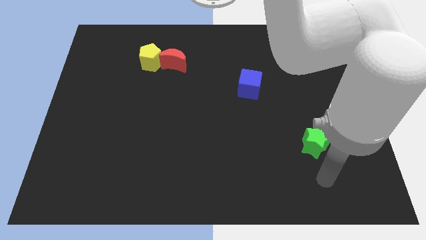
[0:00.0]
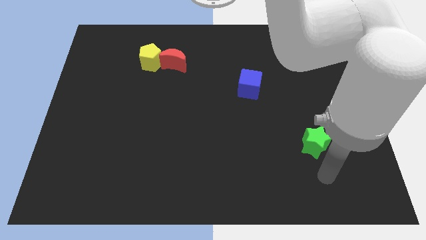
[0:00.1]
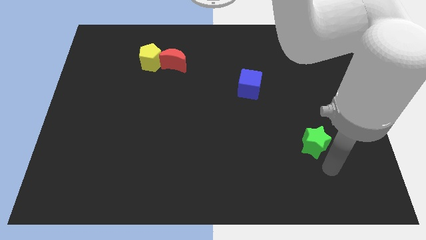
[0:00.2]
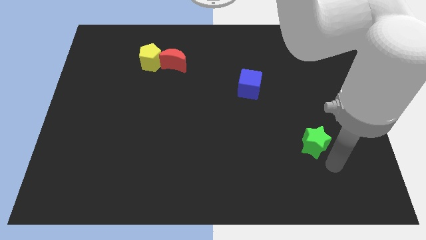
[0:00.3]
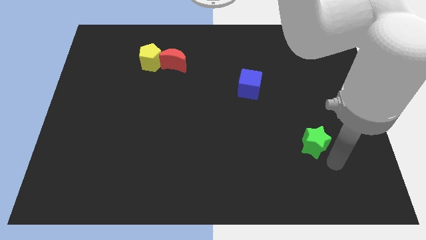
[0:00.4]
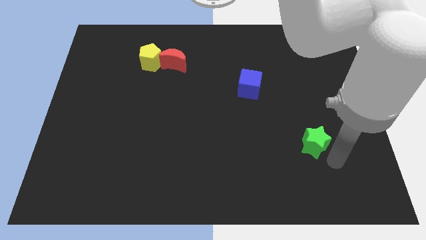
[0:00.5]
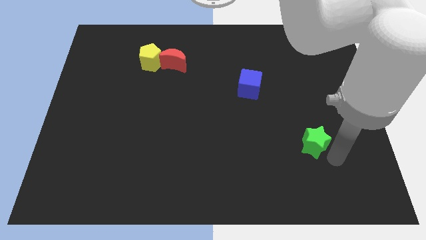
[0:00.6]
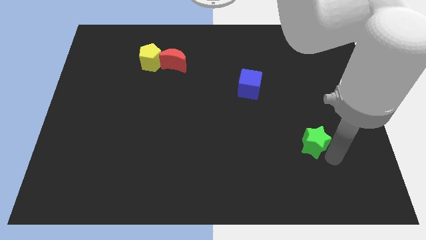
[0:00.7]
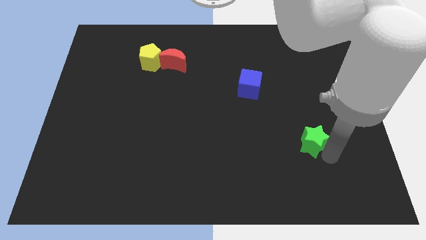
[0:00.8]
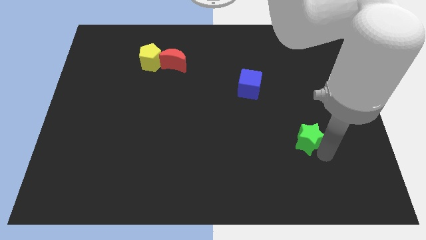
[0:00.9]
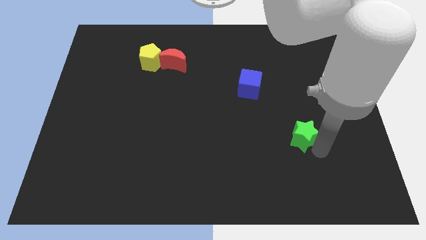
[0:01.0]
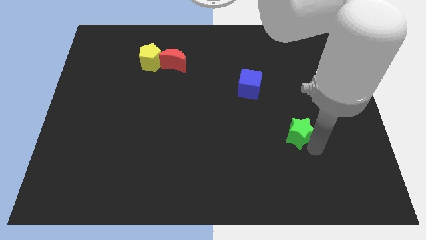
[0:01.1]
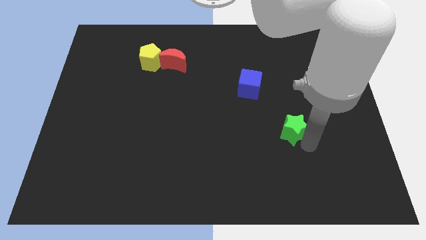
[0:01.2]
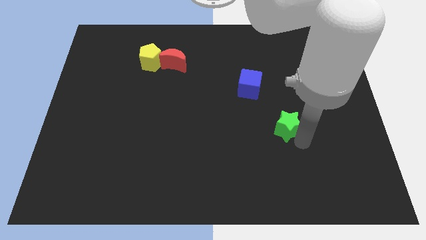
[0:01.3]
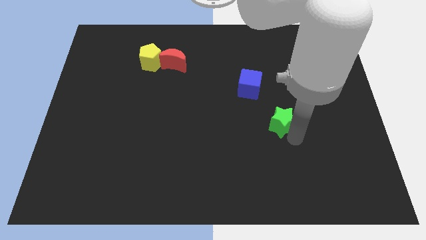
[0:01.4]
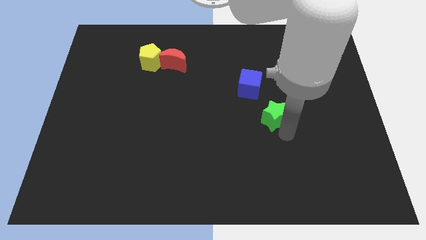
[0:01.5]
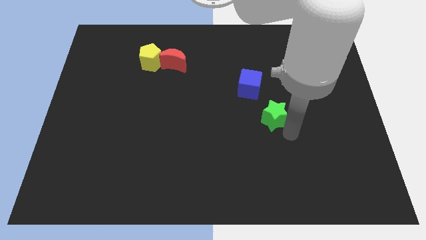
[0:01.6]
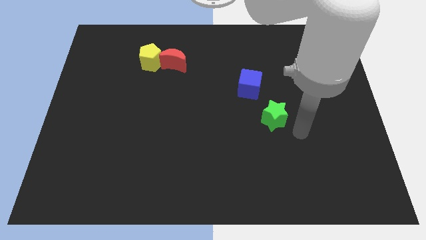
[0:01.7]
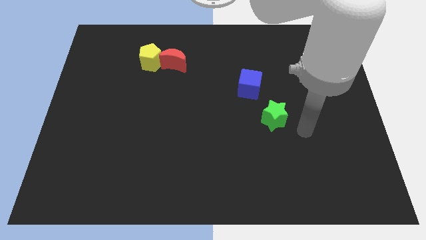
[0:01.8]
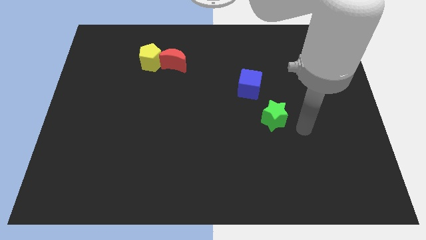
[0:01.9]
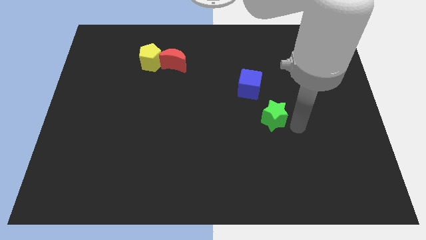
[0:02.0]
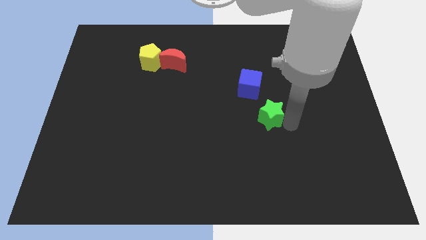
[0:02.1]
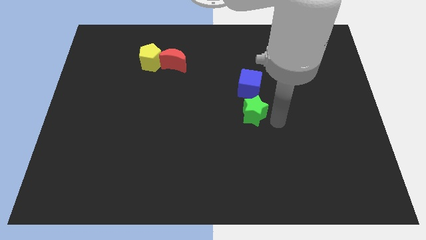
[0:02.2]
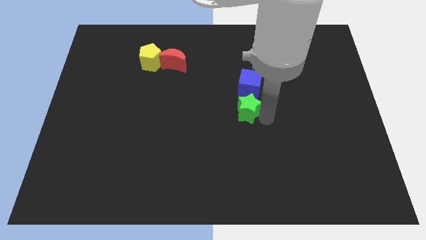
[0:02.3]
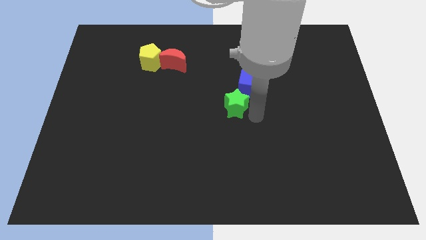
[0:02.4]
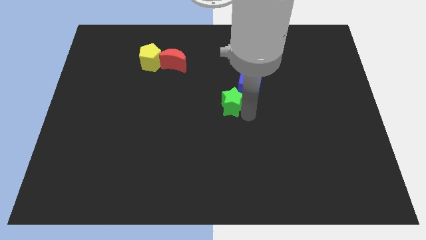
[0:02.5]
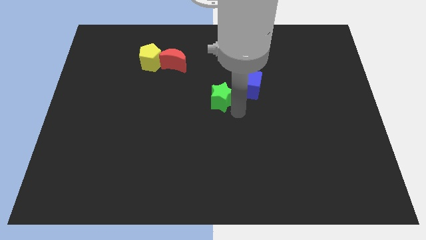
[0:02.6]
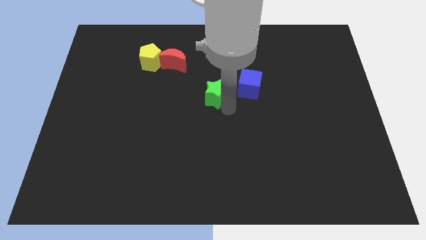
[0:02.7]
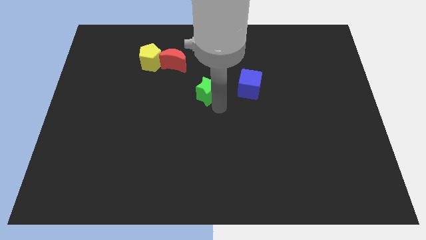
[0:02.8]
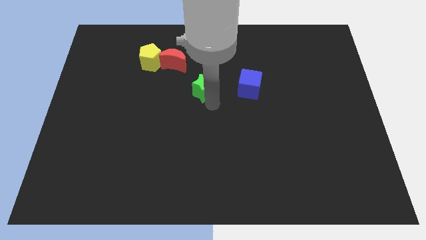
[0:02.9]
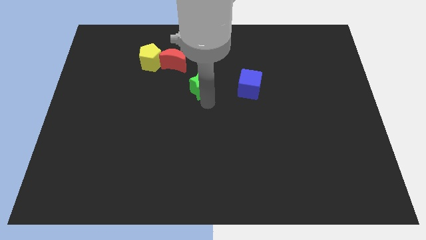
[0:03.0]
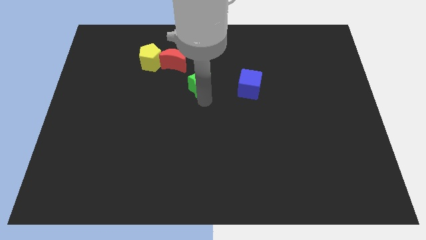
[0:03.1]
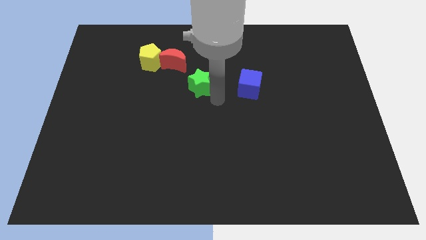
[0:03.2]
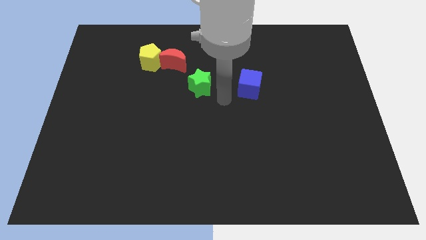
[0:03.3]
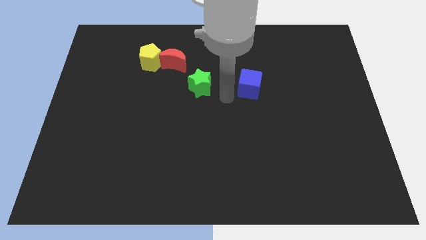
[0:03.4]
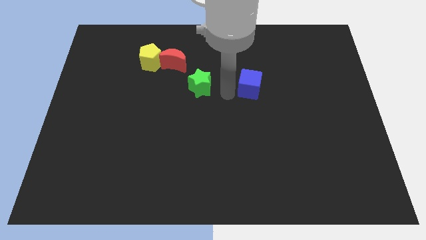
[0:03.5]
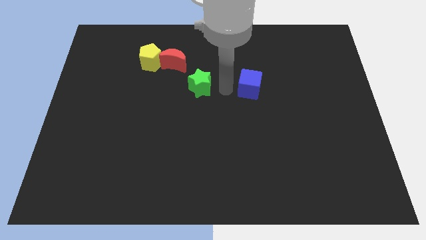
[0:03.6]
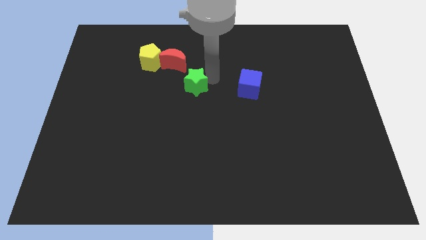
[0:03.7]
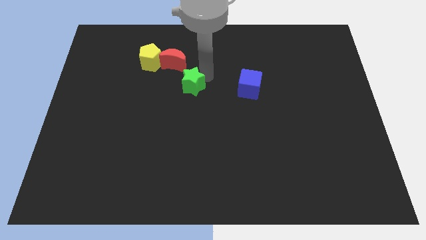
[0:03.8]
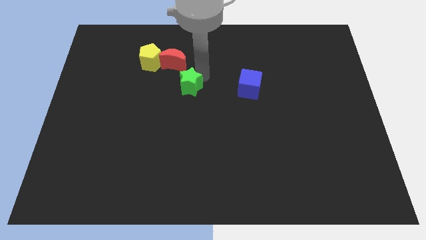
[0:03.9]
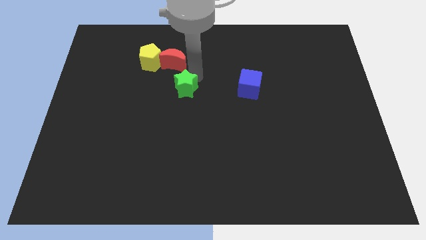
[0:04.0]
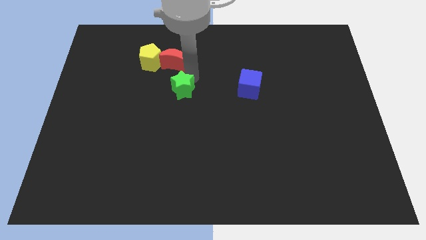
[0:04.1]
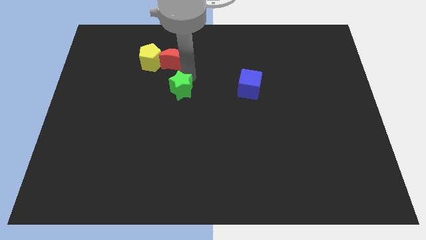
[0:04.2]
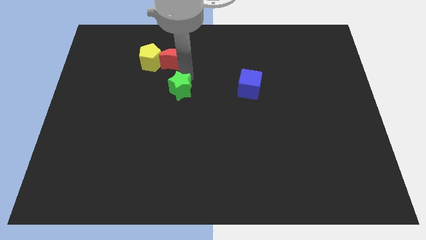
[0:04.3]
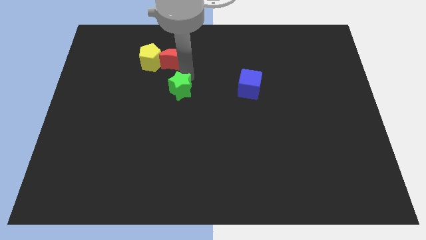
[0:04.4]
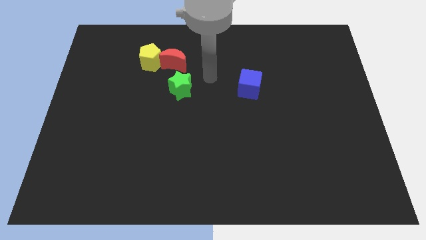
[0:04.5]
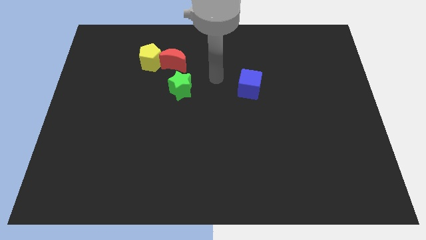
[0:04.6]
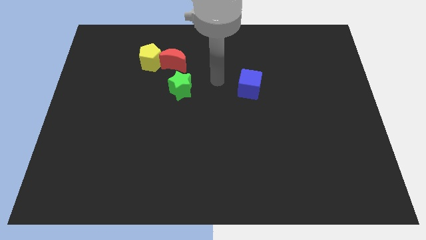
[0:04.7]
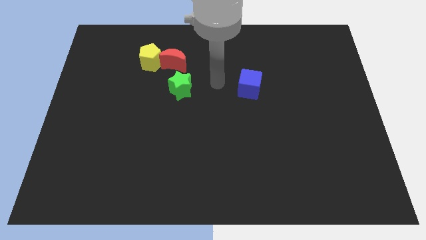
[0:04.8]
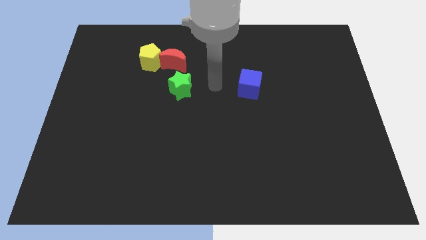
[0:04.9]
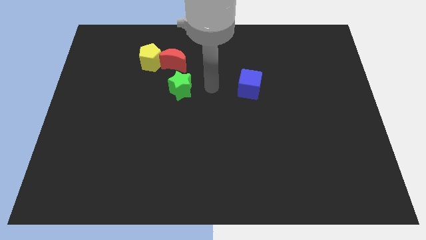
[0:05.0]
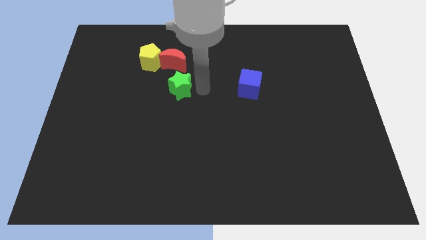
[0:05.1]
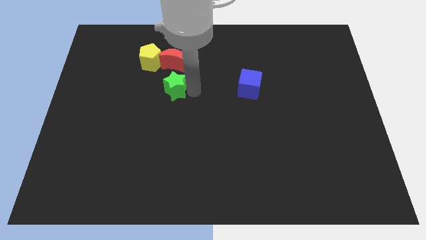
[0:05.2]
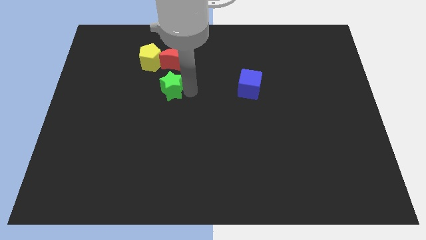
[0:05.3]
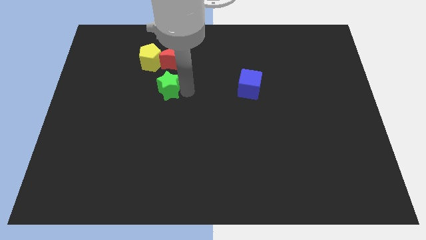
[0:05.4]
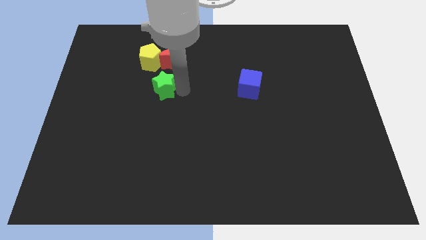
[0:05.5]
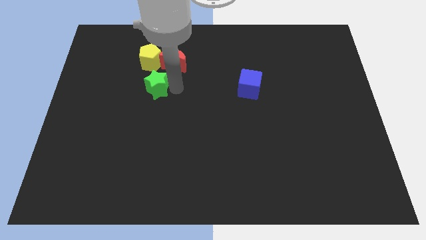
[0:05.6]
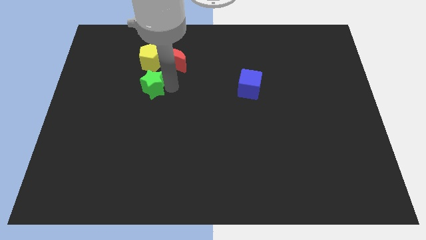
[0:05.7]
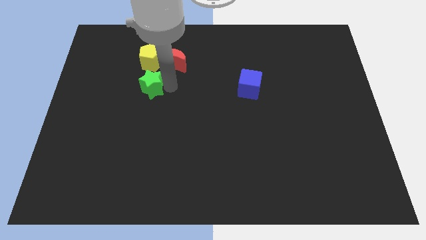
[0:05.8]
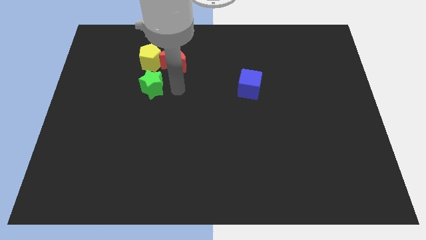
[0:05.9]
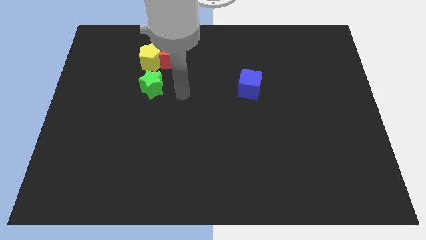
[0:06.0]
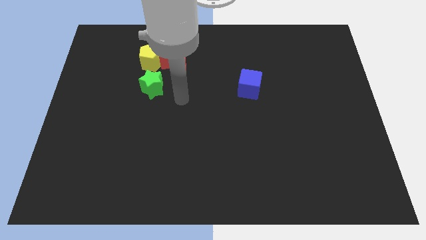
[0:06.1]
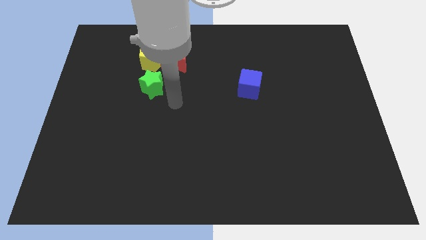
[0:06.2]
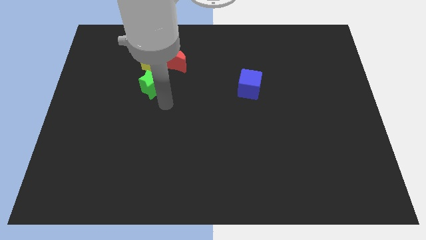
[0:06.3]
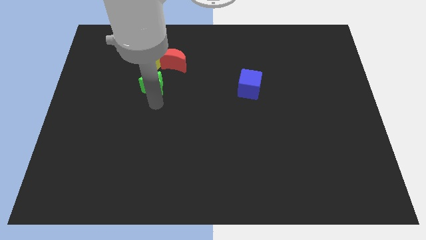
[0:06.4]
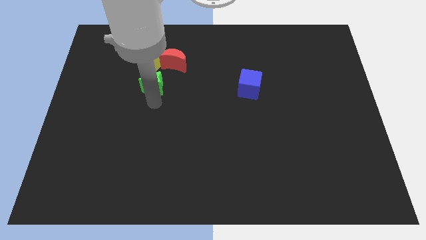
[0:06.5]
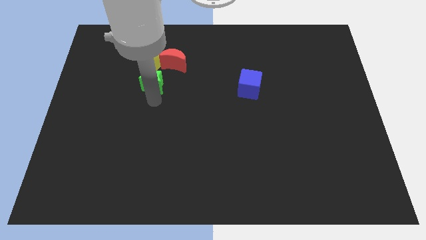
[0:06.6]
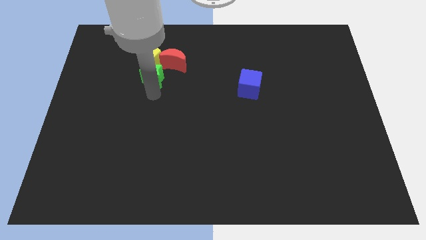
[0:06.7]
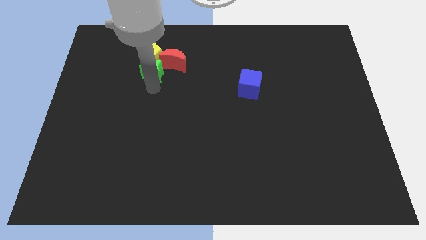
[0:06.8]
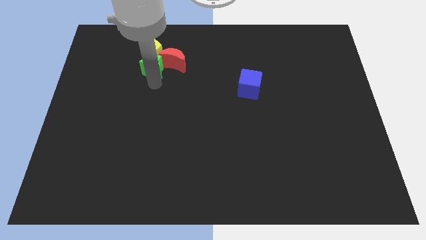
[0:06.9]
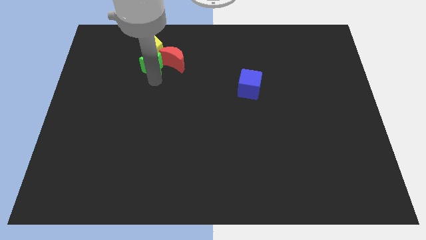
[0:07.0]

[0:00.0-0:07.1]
push the green block close to the pentagon

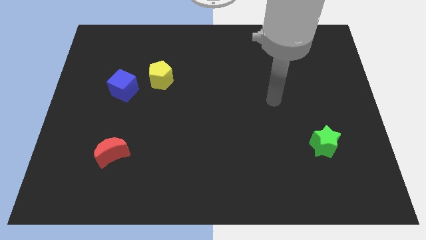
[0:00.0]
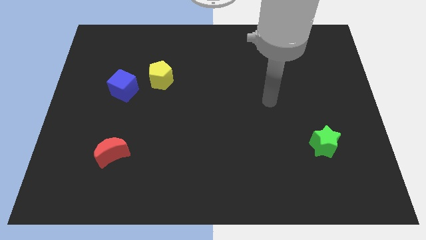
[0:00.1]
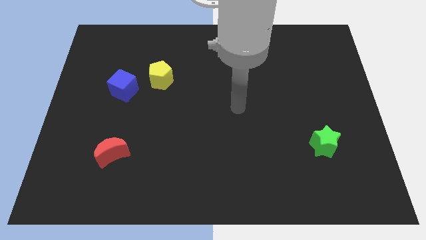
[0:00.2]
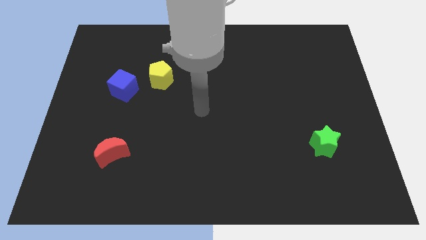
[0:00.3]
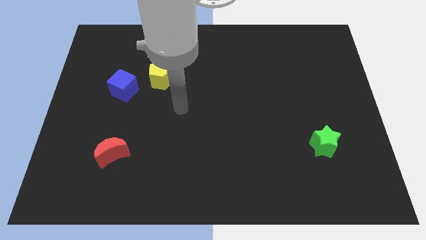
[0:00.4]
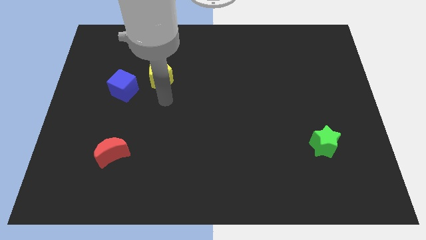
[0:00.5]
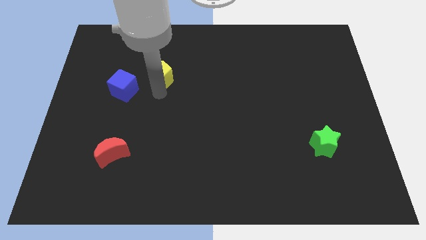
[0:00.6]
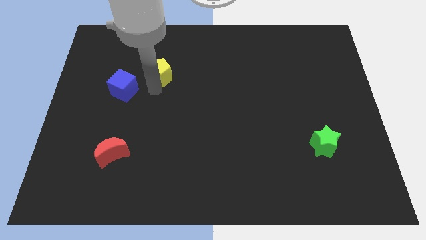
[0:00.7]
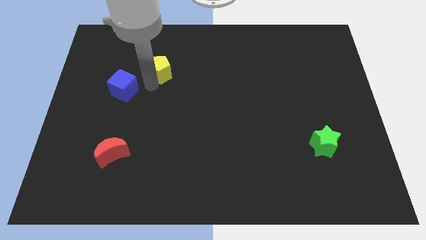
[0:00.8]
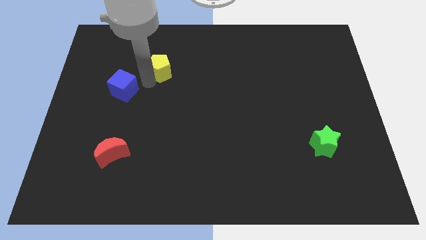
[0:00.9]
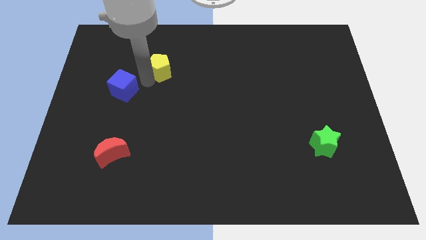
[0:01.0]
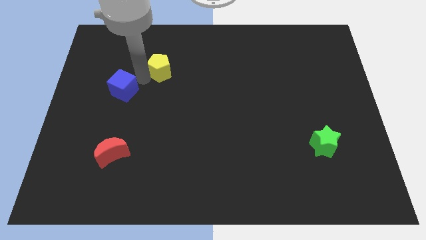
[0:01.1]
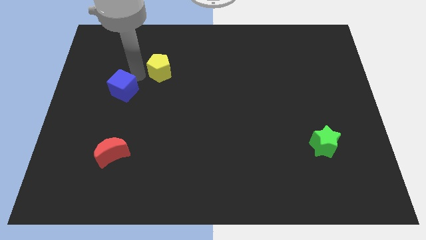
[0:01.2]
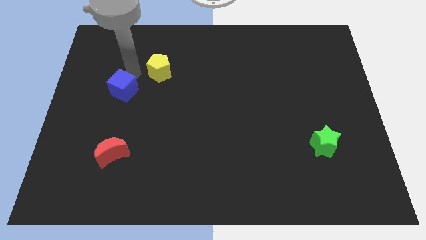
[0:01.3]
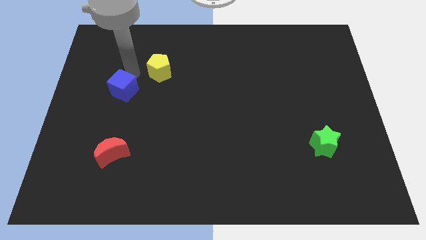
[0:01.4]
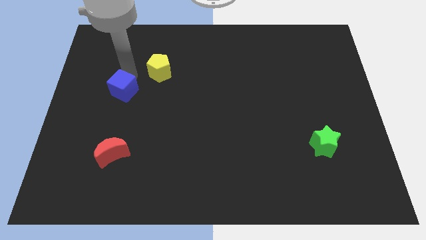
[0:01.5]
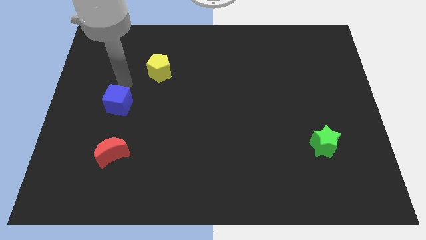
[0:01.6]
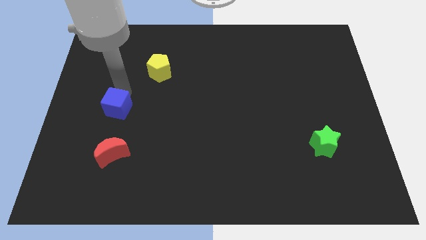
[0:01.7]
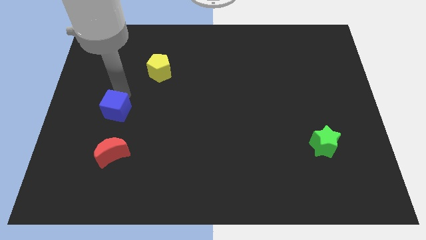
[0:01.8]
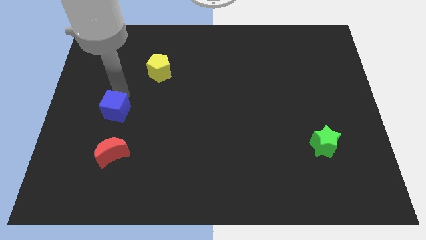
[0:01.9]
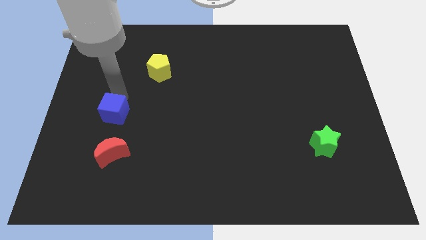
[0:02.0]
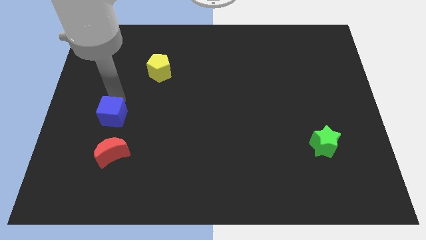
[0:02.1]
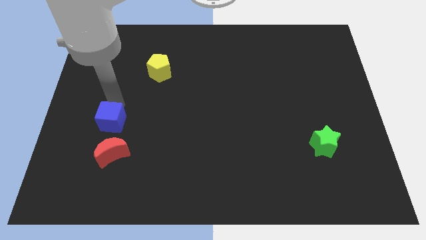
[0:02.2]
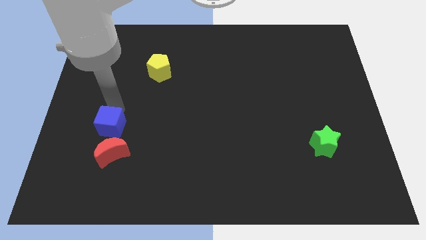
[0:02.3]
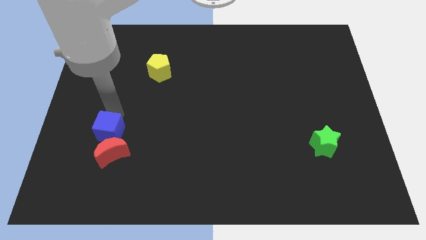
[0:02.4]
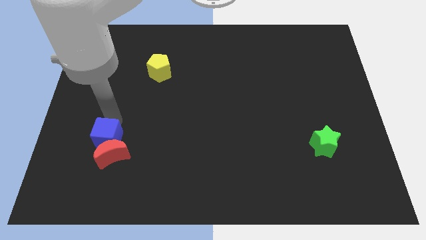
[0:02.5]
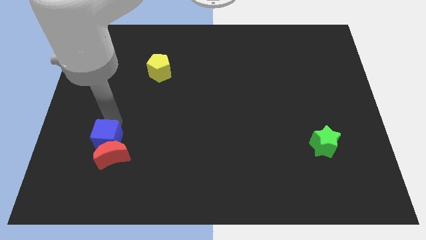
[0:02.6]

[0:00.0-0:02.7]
put the blue cube to the red moon
